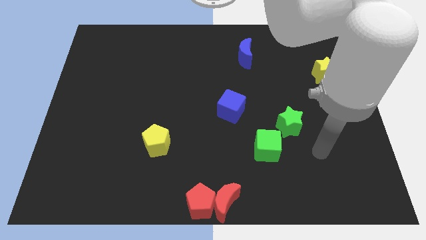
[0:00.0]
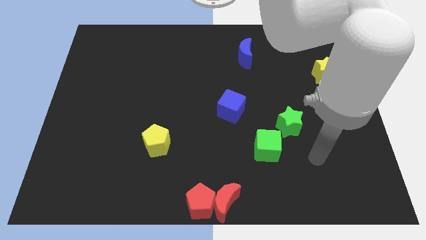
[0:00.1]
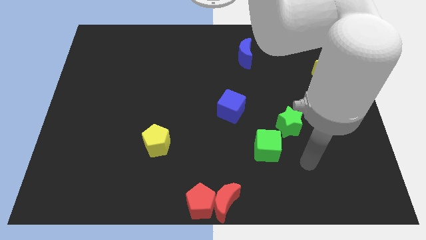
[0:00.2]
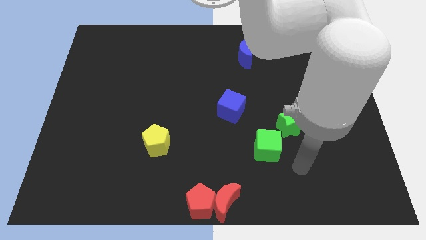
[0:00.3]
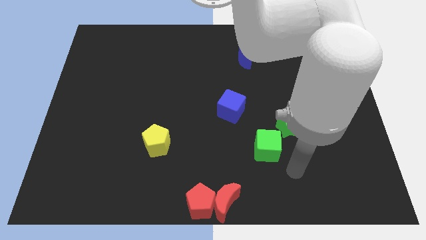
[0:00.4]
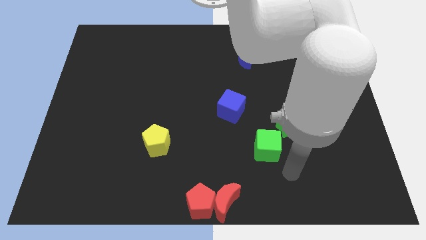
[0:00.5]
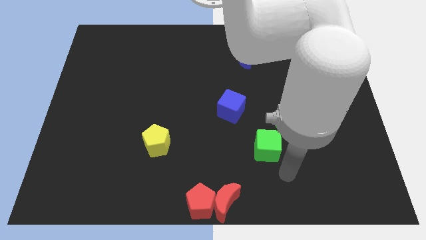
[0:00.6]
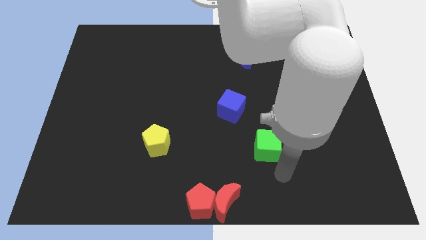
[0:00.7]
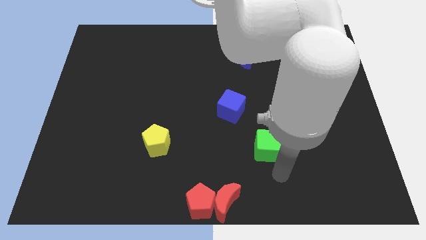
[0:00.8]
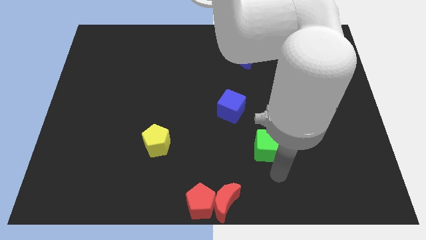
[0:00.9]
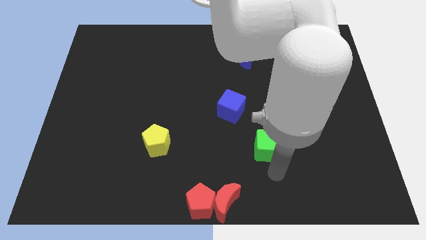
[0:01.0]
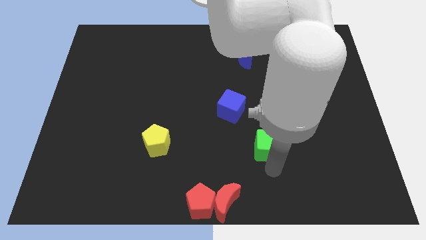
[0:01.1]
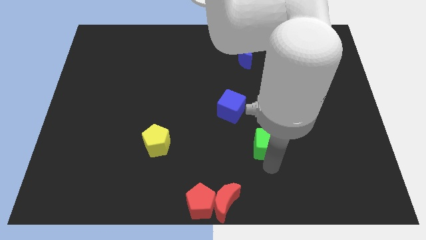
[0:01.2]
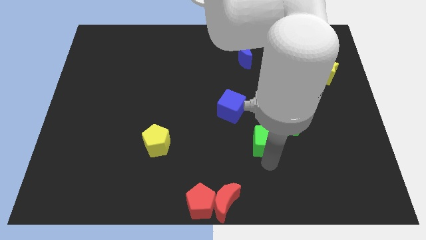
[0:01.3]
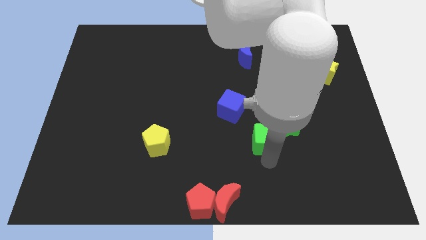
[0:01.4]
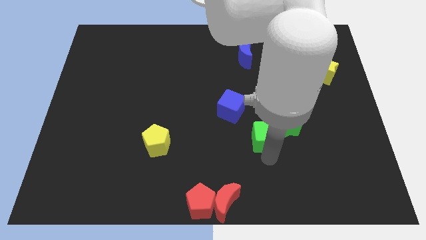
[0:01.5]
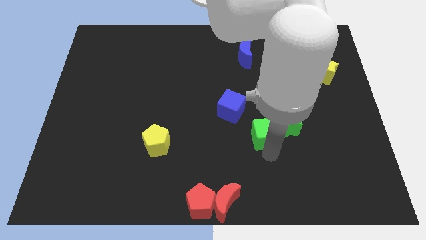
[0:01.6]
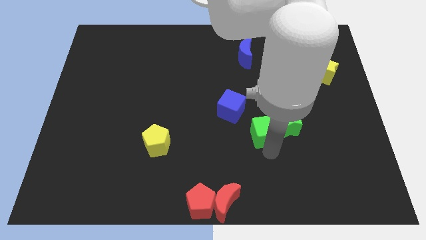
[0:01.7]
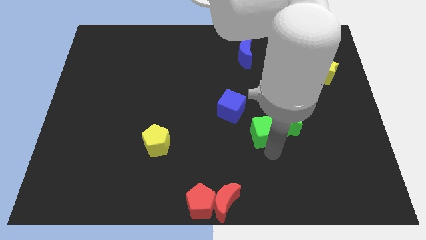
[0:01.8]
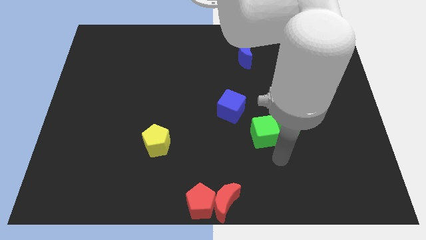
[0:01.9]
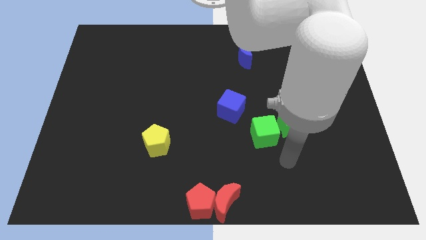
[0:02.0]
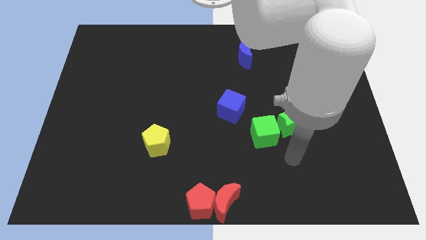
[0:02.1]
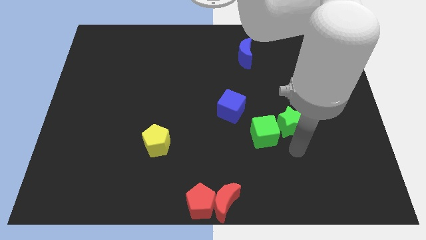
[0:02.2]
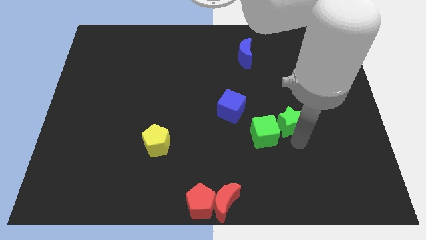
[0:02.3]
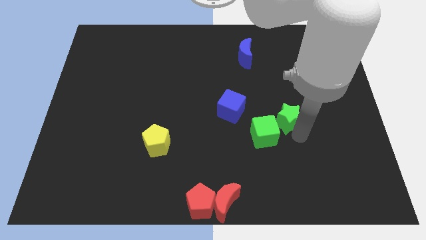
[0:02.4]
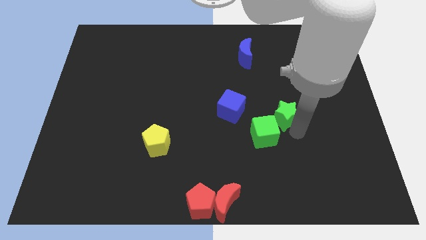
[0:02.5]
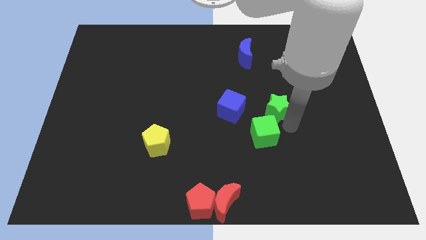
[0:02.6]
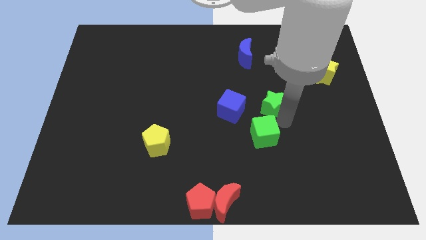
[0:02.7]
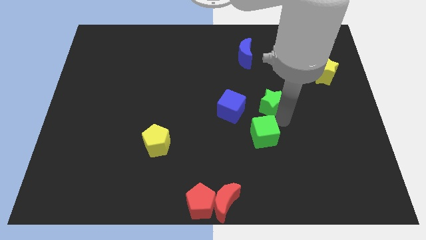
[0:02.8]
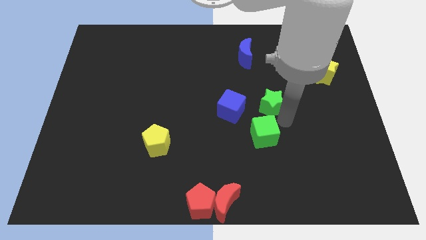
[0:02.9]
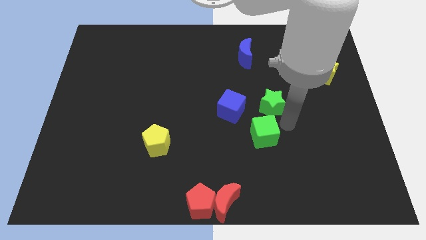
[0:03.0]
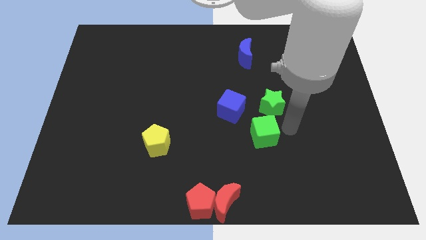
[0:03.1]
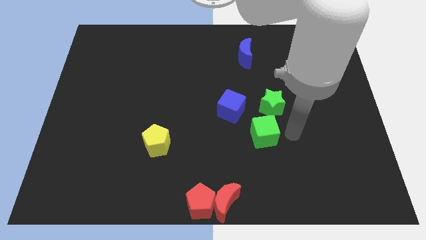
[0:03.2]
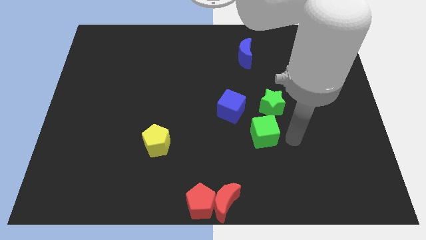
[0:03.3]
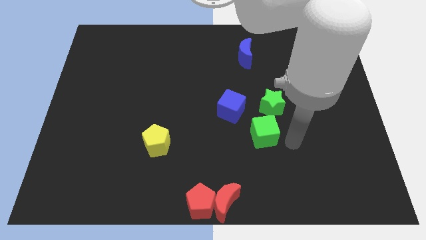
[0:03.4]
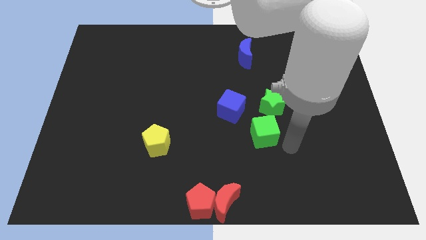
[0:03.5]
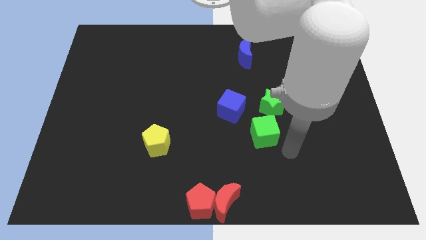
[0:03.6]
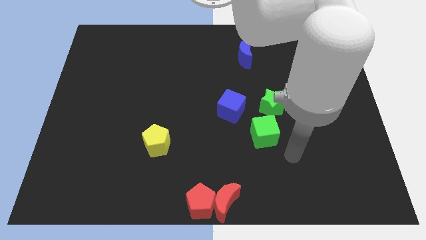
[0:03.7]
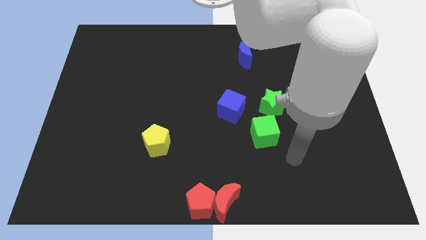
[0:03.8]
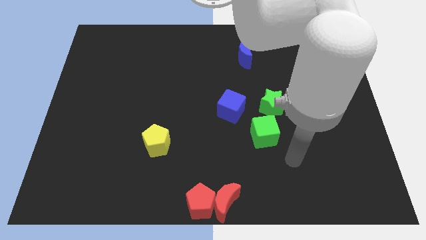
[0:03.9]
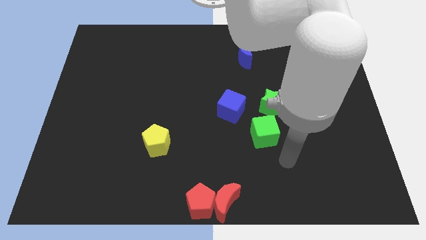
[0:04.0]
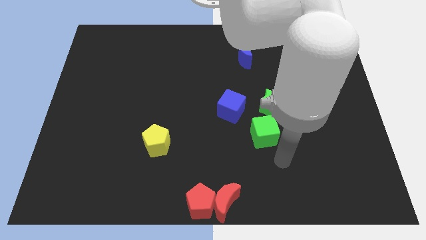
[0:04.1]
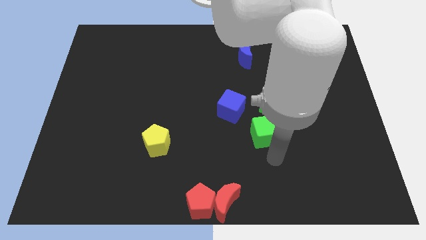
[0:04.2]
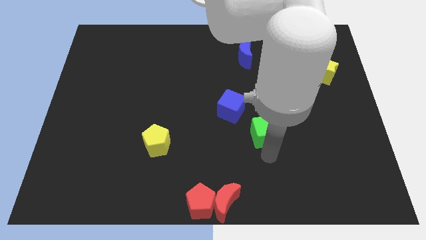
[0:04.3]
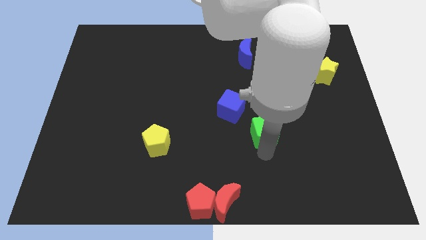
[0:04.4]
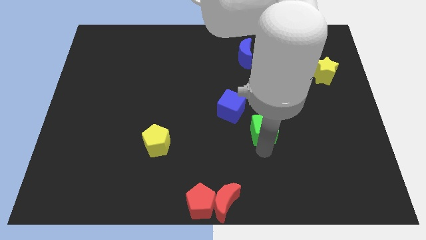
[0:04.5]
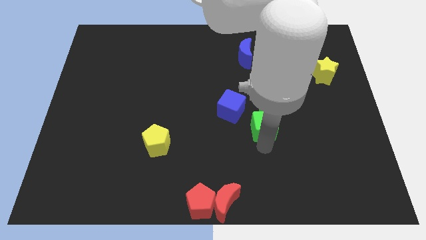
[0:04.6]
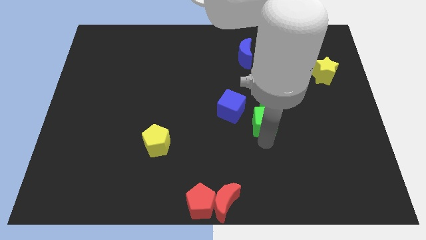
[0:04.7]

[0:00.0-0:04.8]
move the green blocks between red moon and yellow star

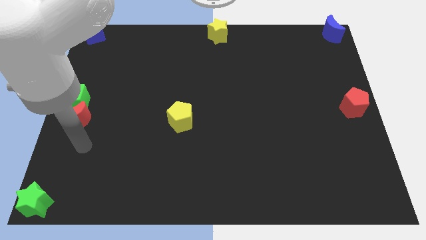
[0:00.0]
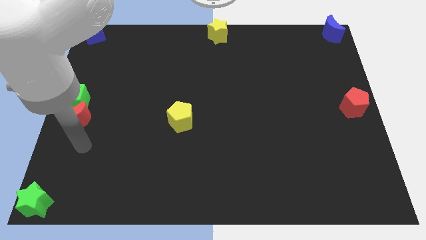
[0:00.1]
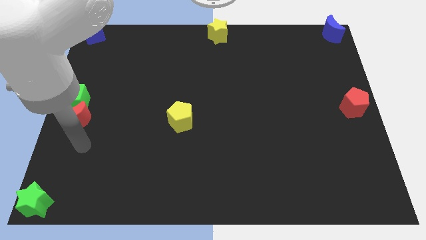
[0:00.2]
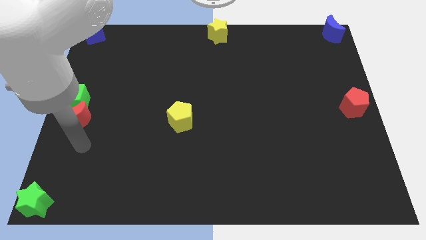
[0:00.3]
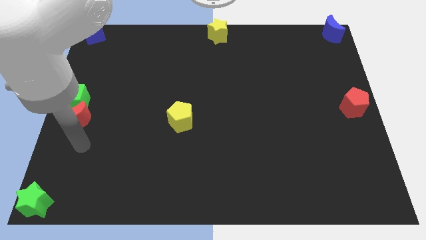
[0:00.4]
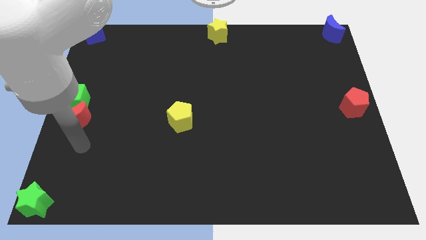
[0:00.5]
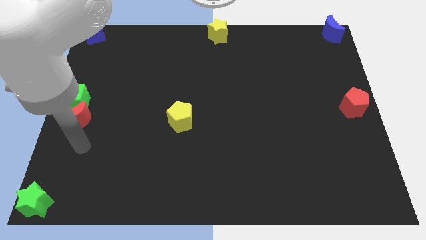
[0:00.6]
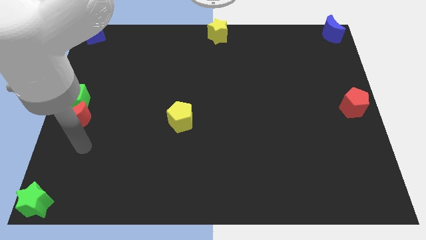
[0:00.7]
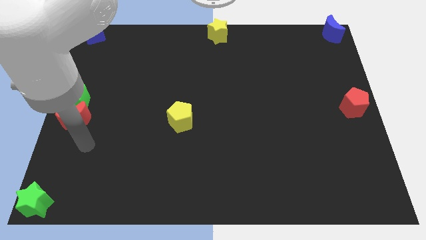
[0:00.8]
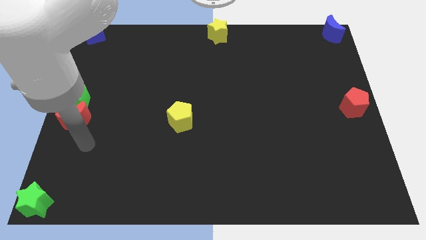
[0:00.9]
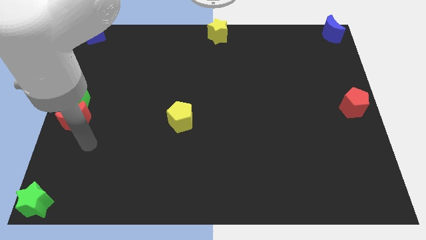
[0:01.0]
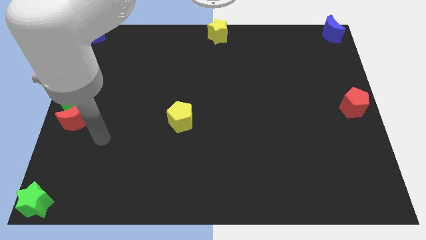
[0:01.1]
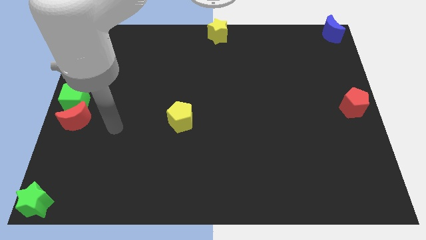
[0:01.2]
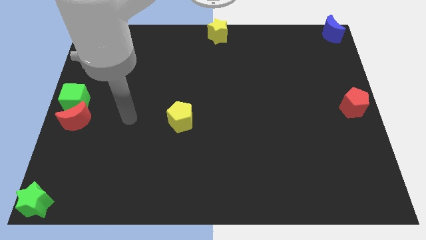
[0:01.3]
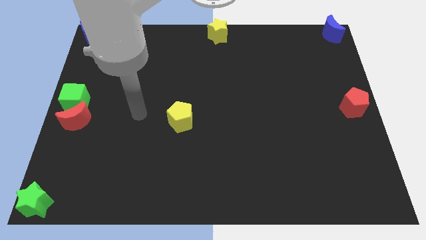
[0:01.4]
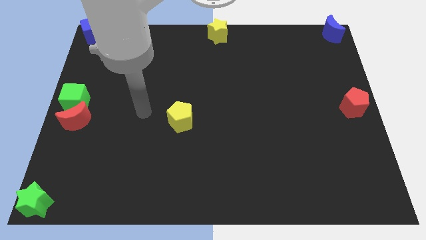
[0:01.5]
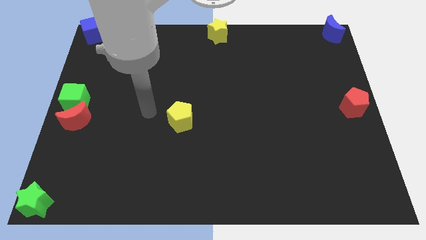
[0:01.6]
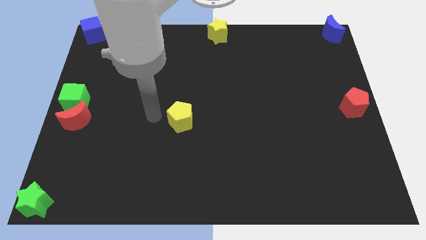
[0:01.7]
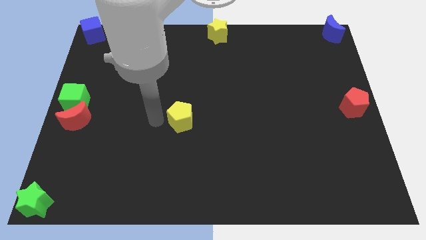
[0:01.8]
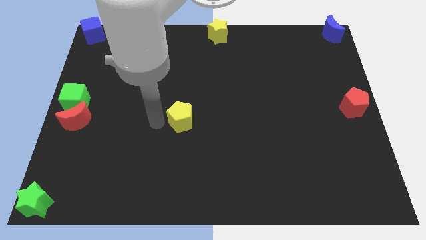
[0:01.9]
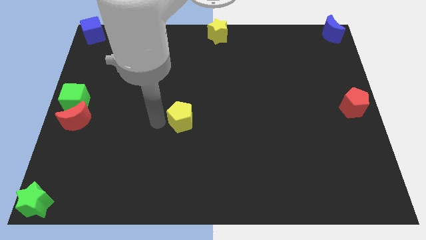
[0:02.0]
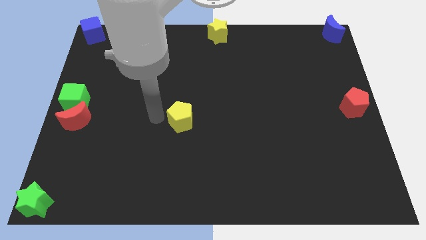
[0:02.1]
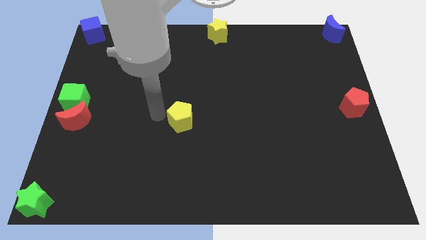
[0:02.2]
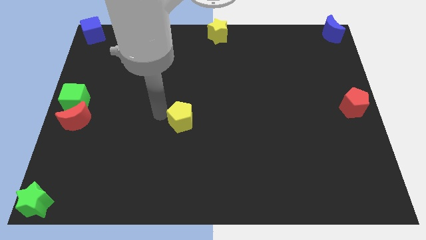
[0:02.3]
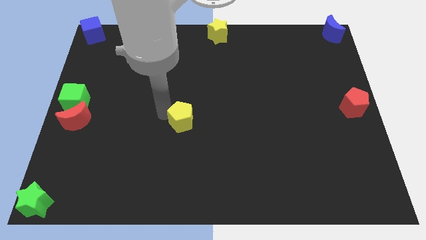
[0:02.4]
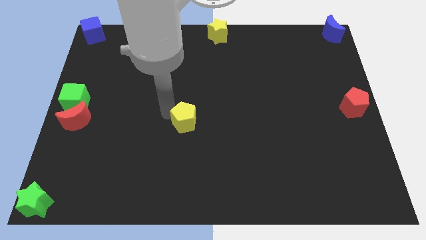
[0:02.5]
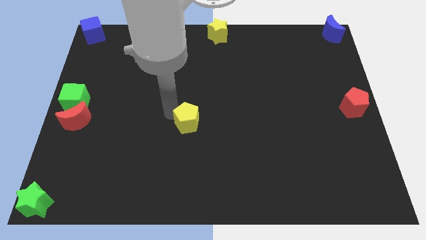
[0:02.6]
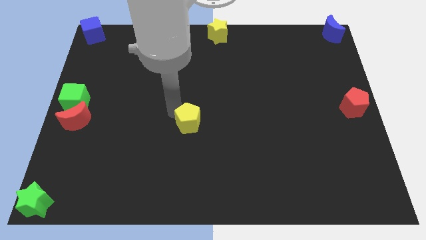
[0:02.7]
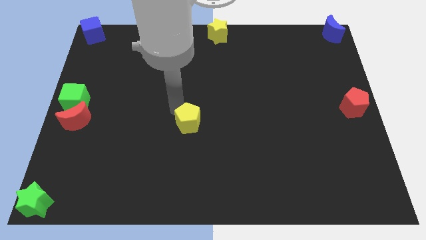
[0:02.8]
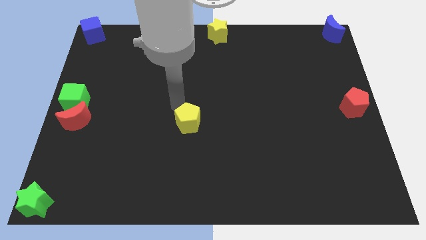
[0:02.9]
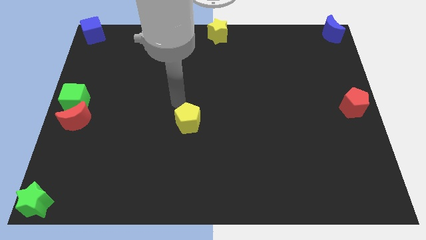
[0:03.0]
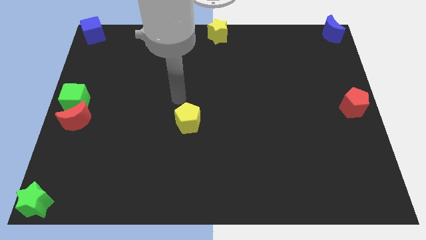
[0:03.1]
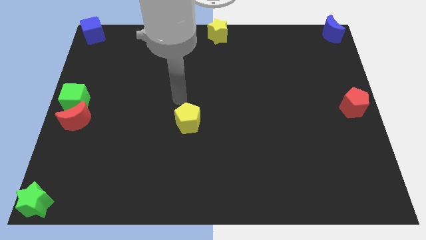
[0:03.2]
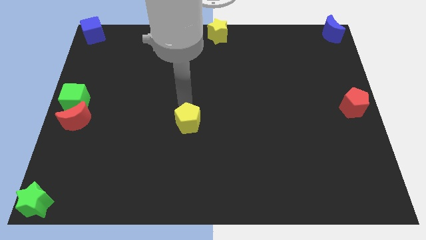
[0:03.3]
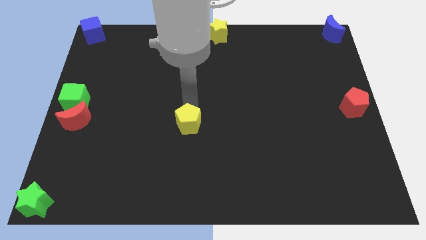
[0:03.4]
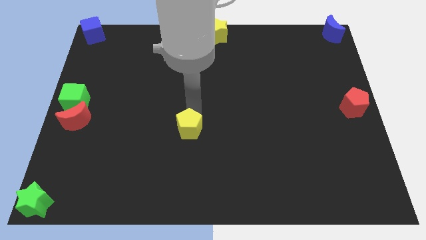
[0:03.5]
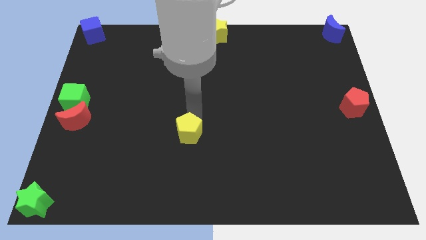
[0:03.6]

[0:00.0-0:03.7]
move the yellow pentagon towards the bottom center of the board

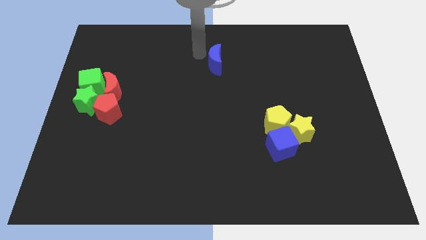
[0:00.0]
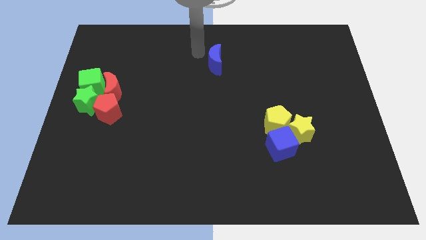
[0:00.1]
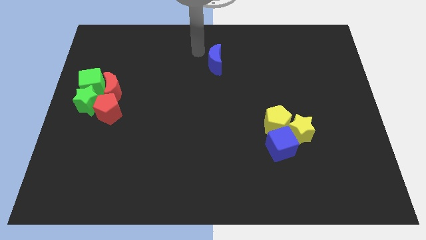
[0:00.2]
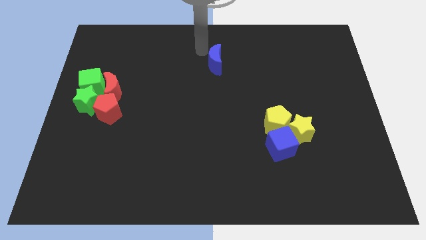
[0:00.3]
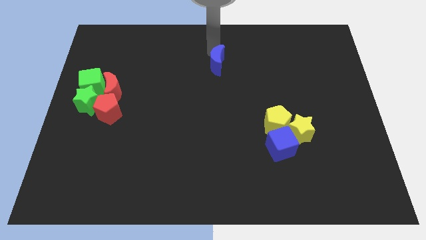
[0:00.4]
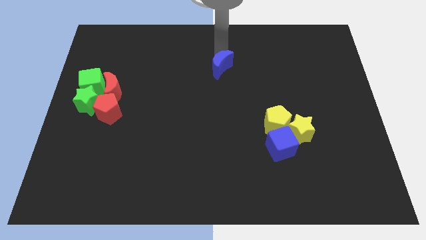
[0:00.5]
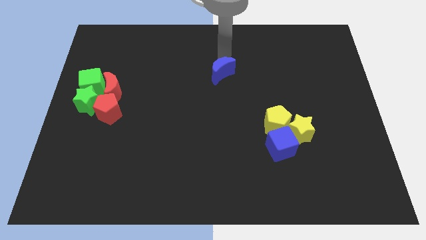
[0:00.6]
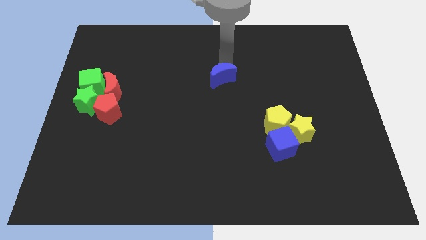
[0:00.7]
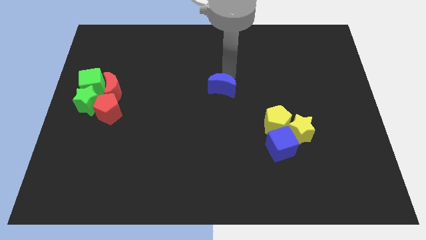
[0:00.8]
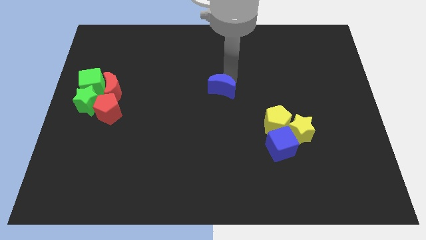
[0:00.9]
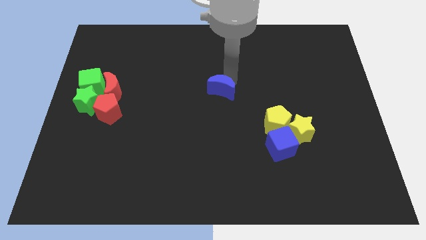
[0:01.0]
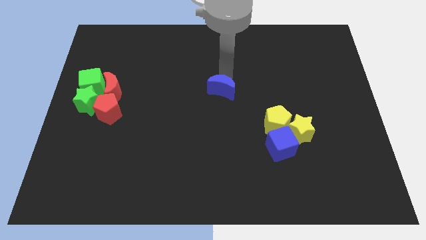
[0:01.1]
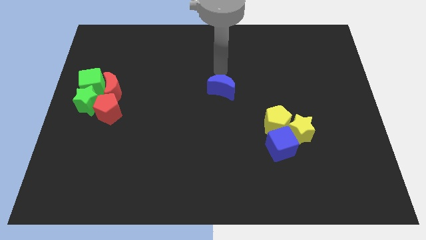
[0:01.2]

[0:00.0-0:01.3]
put the blue crescent at the center of the board
